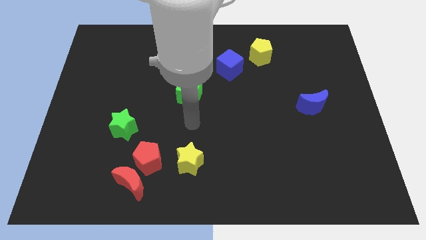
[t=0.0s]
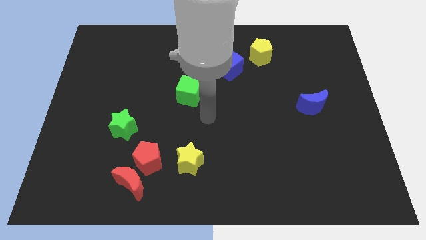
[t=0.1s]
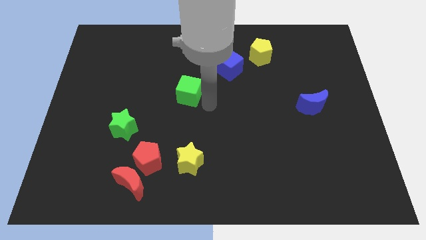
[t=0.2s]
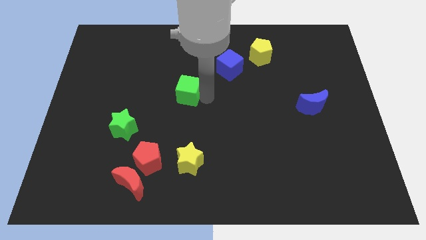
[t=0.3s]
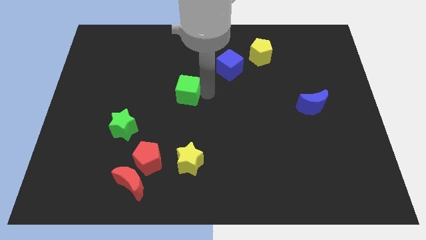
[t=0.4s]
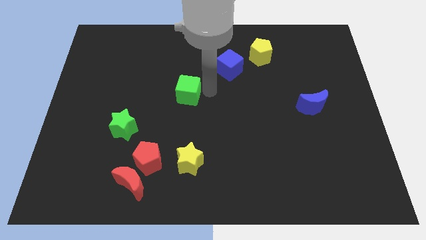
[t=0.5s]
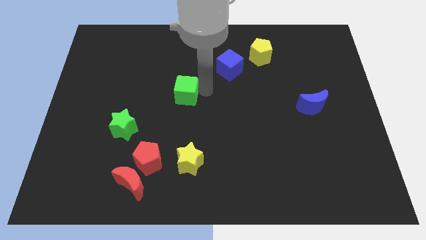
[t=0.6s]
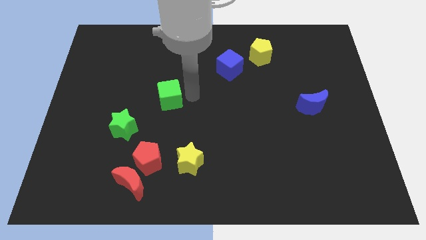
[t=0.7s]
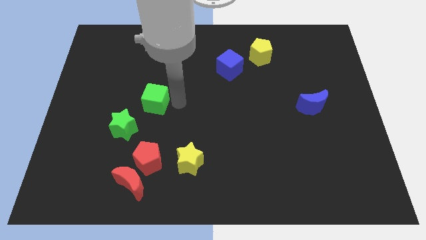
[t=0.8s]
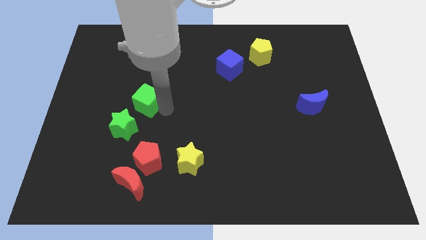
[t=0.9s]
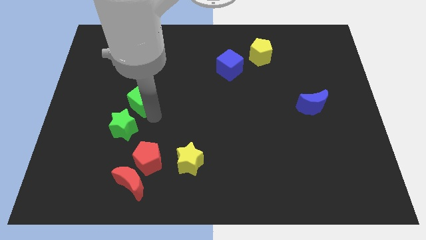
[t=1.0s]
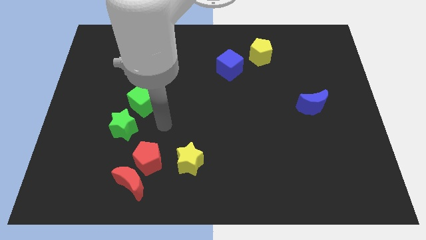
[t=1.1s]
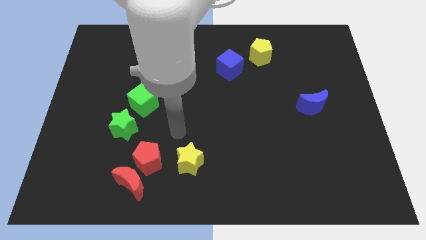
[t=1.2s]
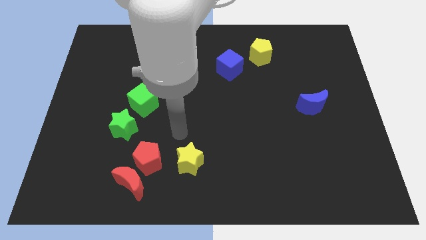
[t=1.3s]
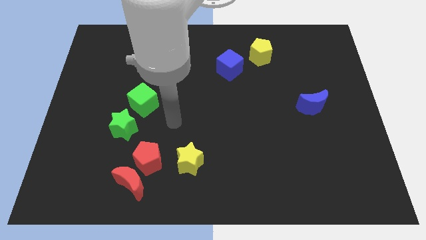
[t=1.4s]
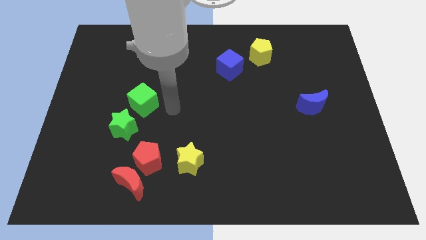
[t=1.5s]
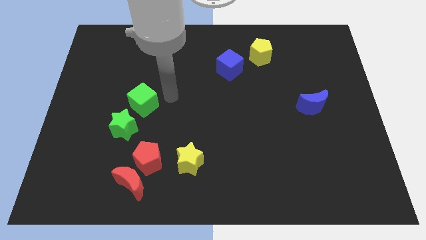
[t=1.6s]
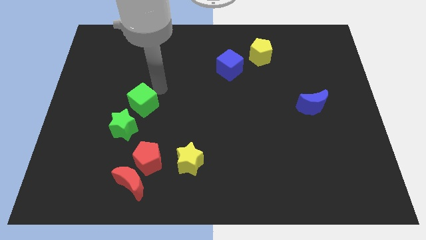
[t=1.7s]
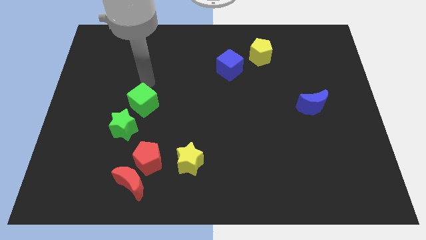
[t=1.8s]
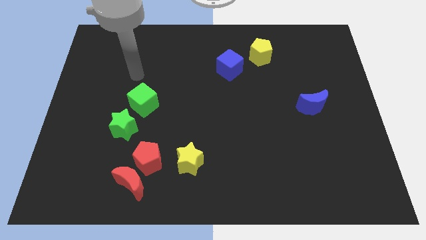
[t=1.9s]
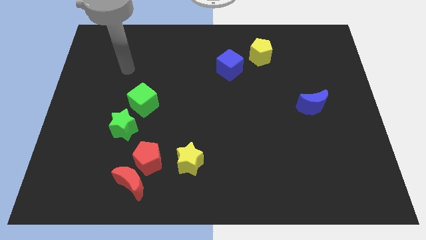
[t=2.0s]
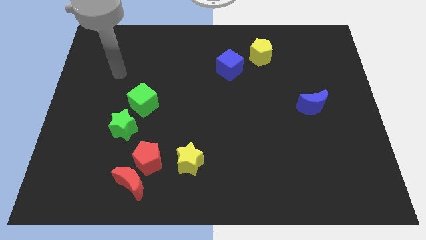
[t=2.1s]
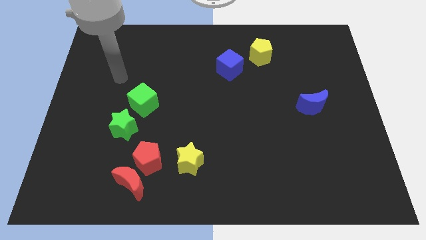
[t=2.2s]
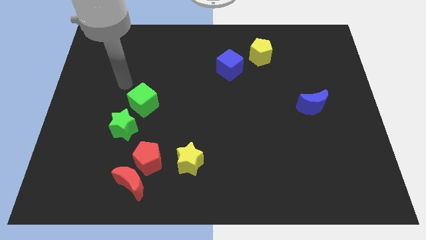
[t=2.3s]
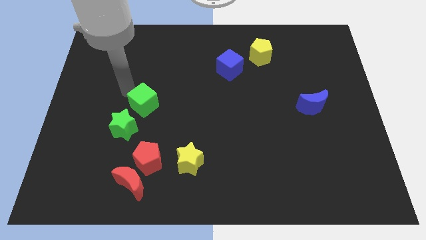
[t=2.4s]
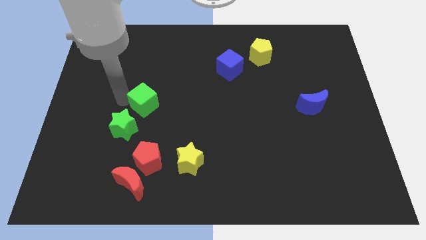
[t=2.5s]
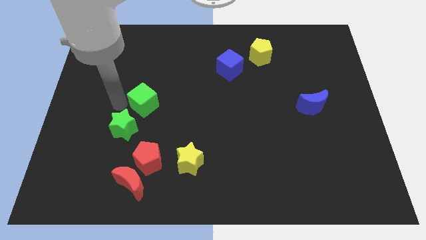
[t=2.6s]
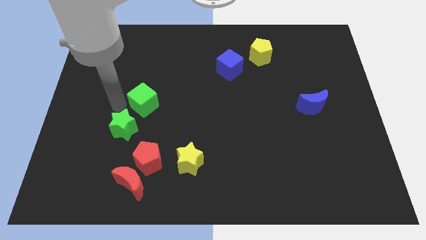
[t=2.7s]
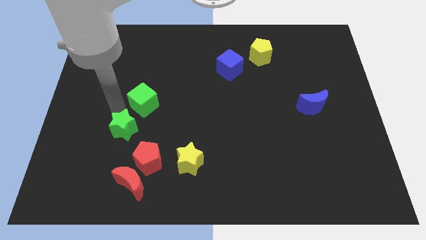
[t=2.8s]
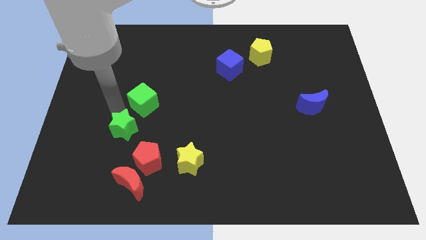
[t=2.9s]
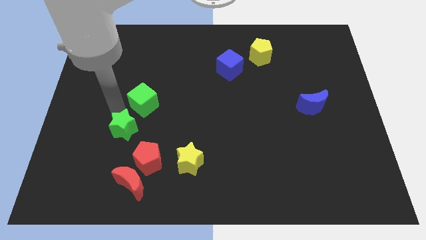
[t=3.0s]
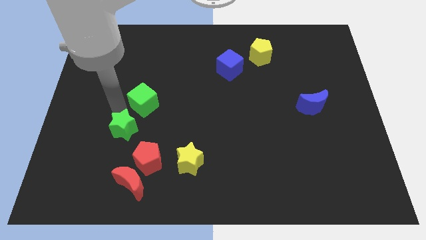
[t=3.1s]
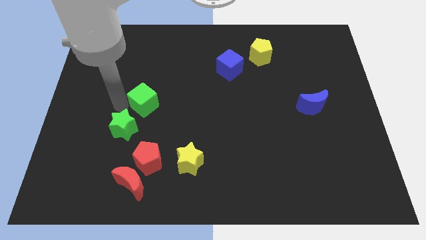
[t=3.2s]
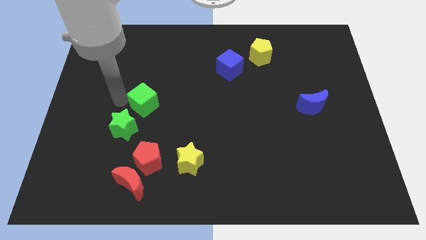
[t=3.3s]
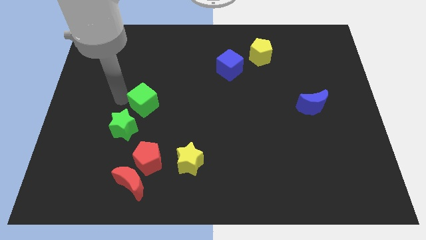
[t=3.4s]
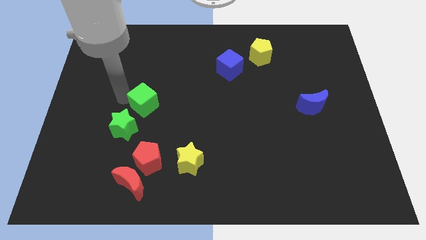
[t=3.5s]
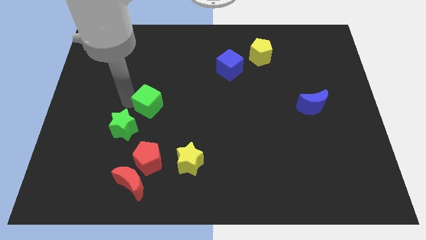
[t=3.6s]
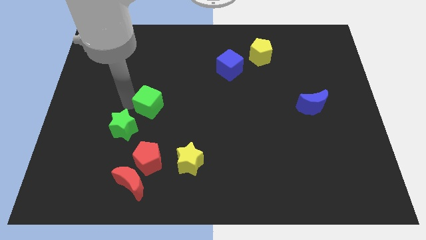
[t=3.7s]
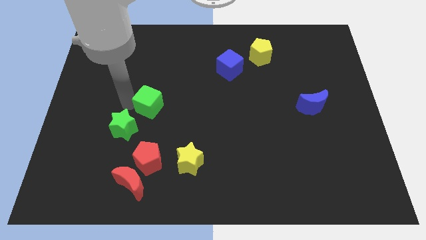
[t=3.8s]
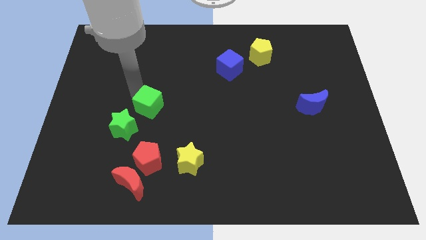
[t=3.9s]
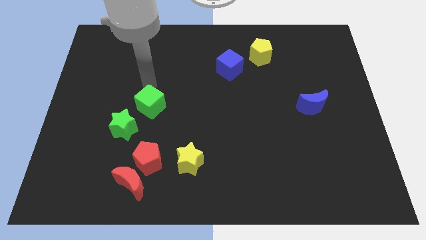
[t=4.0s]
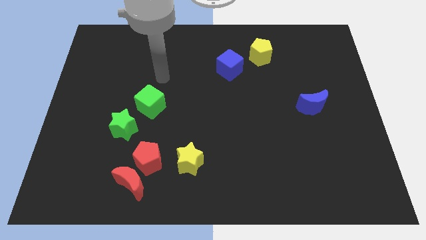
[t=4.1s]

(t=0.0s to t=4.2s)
push the green cube towards the top right of green star

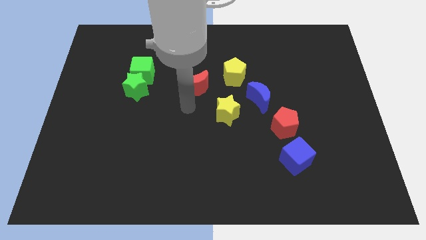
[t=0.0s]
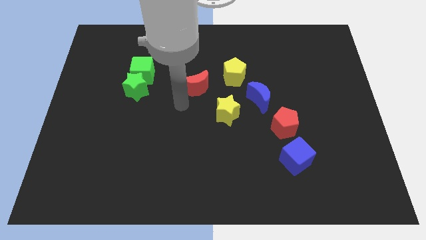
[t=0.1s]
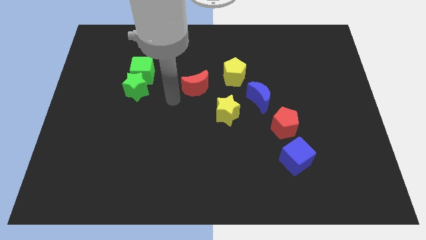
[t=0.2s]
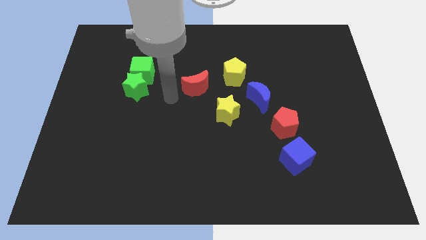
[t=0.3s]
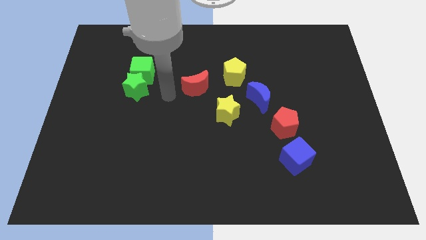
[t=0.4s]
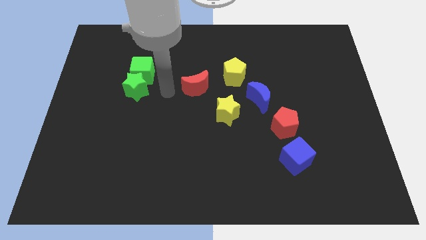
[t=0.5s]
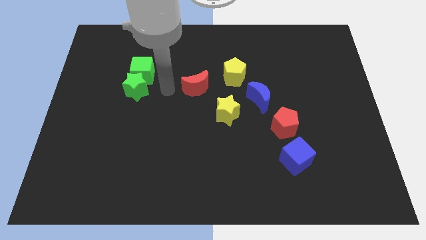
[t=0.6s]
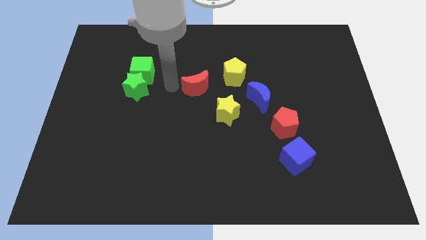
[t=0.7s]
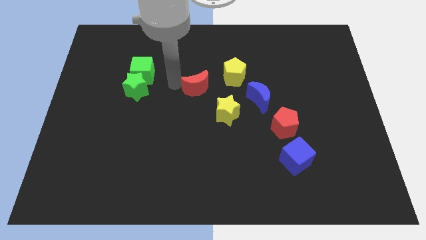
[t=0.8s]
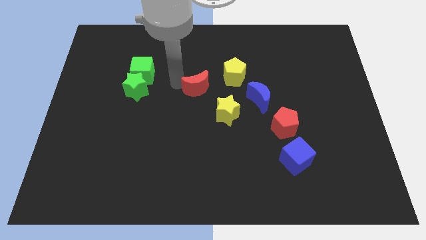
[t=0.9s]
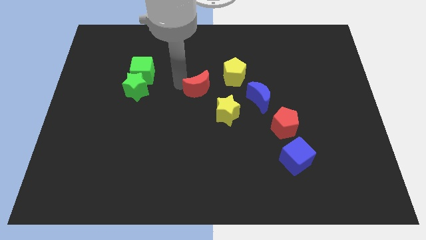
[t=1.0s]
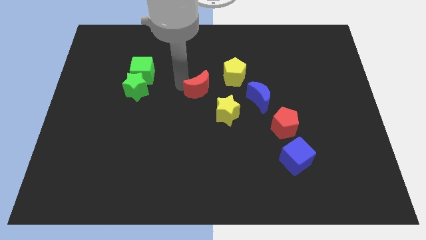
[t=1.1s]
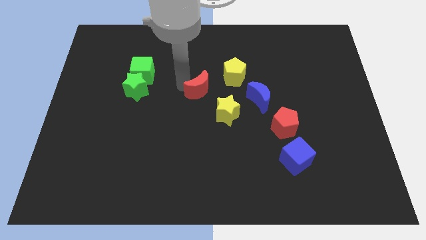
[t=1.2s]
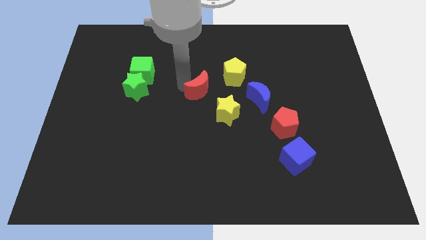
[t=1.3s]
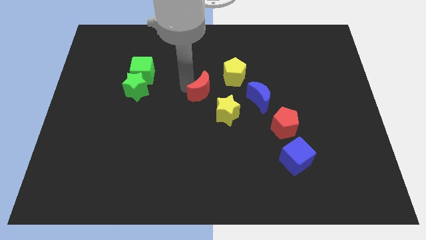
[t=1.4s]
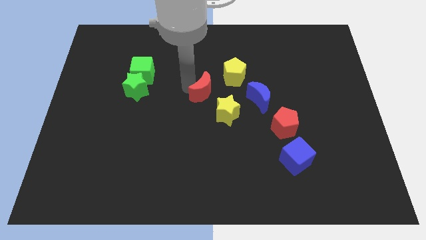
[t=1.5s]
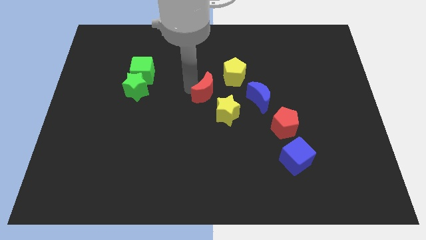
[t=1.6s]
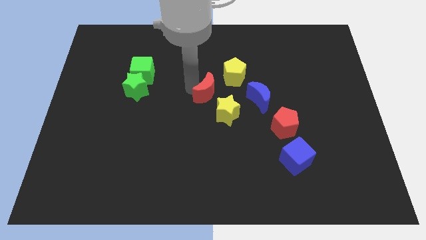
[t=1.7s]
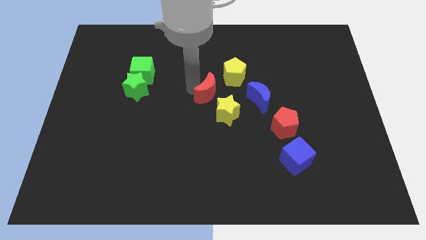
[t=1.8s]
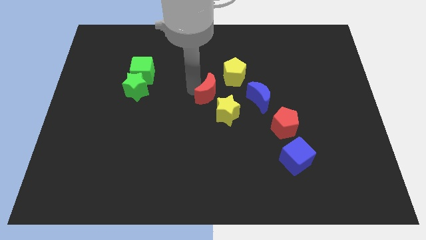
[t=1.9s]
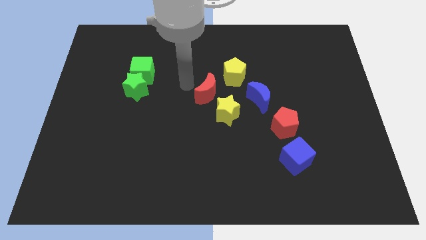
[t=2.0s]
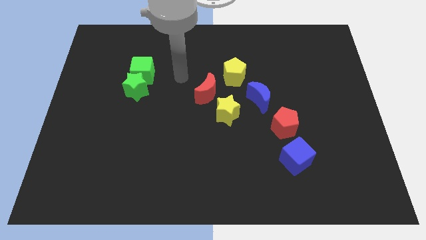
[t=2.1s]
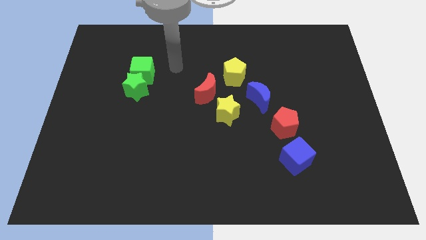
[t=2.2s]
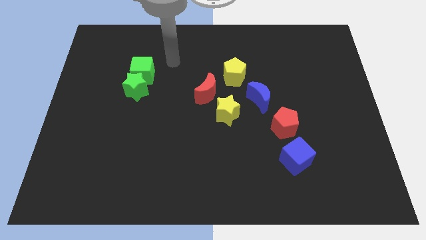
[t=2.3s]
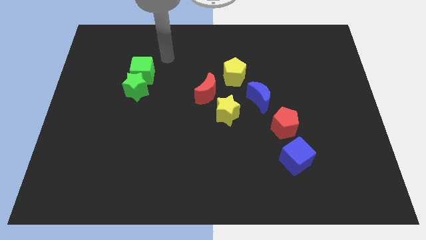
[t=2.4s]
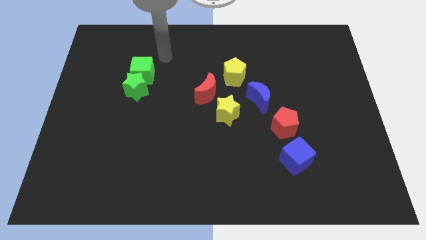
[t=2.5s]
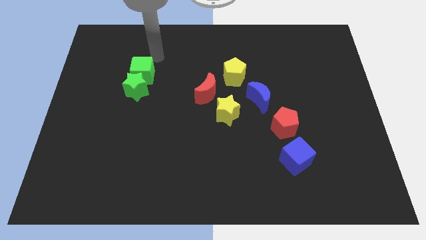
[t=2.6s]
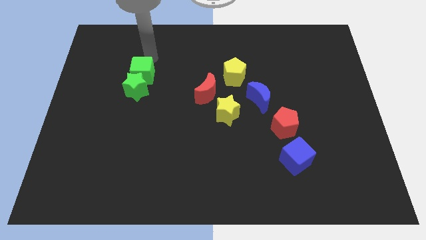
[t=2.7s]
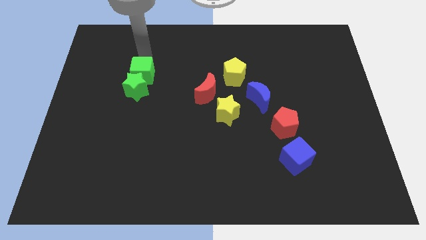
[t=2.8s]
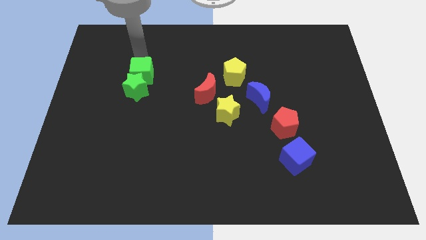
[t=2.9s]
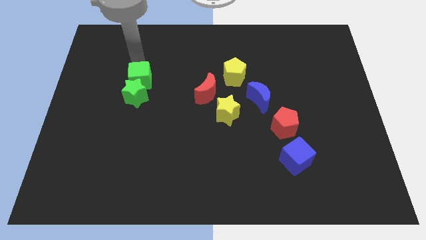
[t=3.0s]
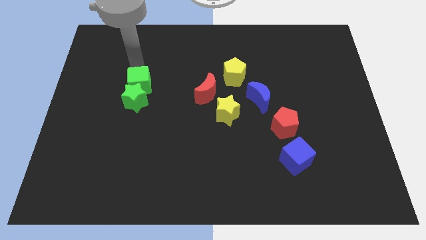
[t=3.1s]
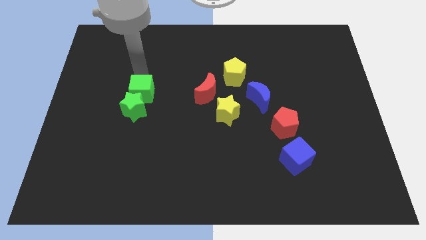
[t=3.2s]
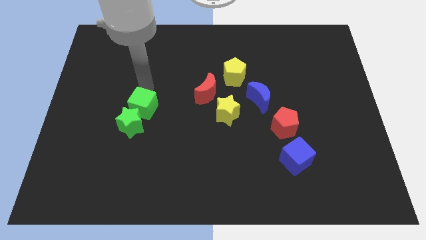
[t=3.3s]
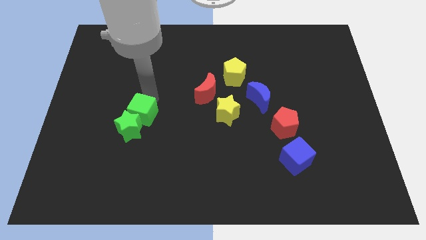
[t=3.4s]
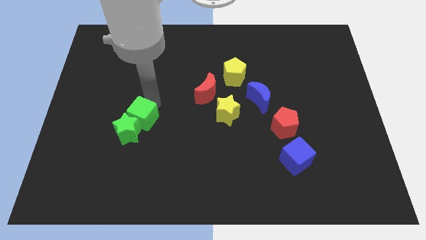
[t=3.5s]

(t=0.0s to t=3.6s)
move the green star slightly to the left bottom corner with the help of green cube

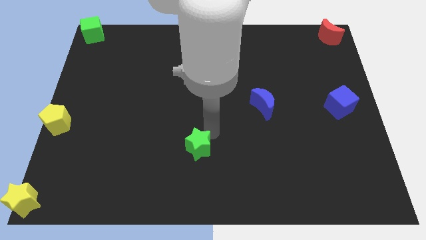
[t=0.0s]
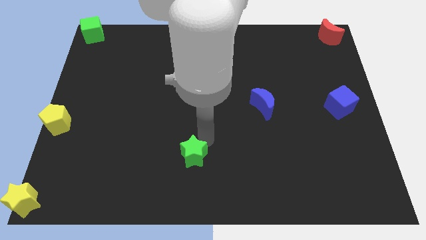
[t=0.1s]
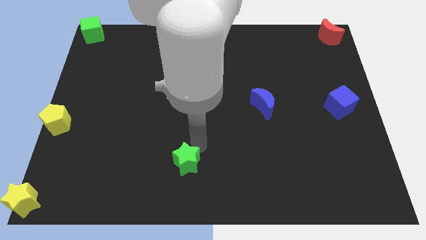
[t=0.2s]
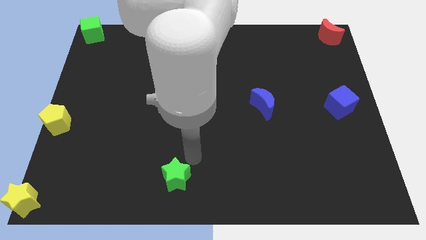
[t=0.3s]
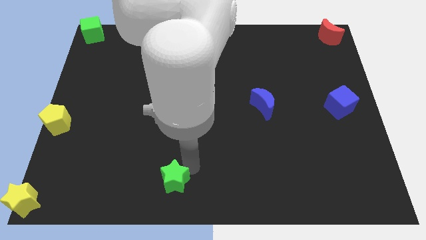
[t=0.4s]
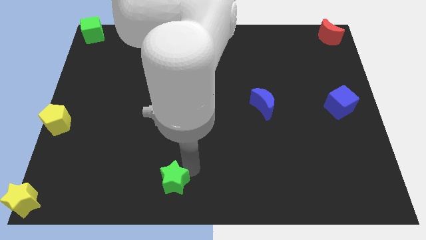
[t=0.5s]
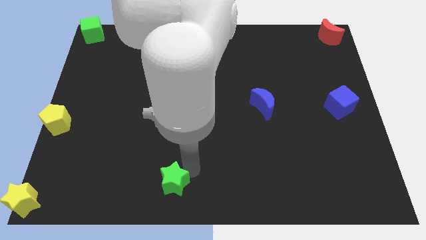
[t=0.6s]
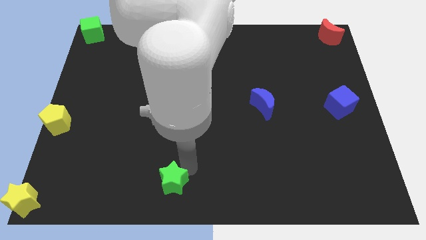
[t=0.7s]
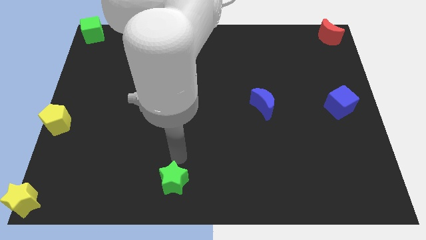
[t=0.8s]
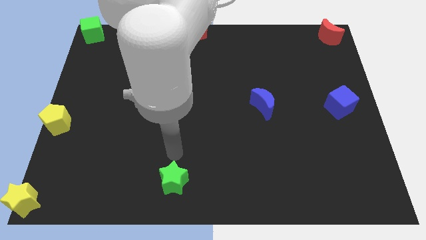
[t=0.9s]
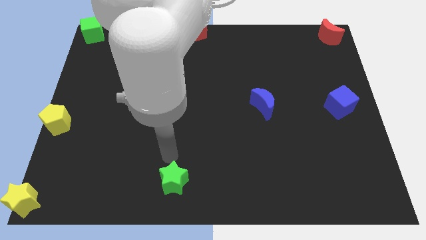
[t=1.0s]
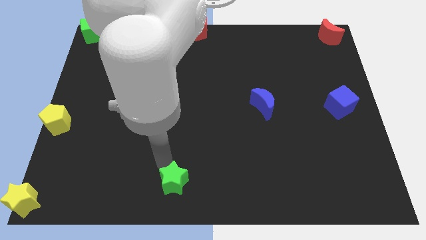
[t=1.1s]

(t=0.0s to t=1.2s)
push the green star towards the bottom side of the board

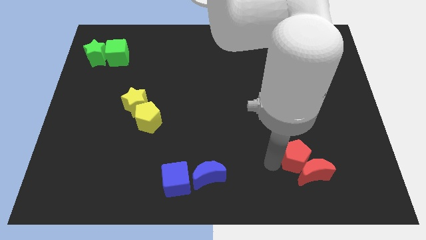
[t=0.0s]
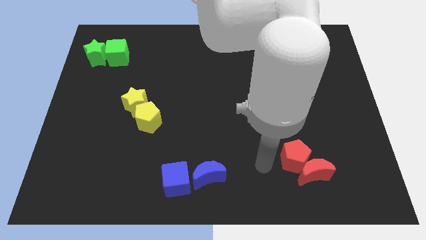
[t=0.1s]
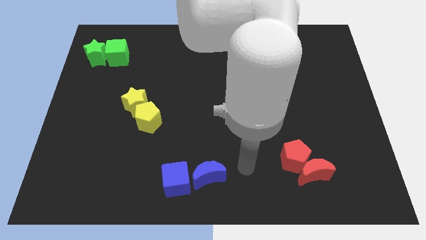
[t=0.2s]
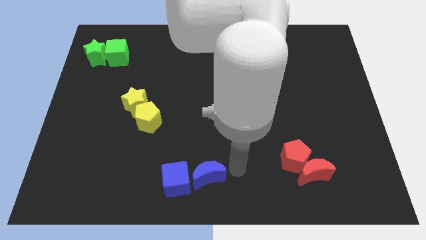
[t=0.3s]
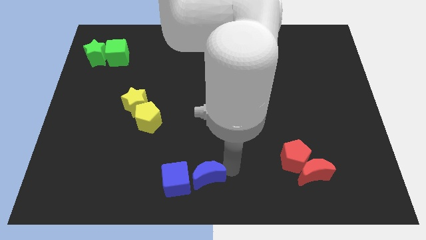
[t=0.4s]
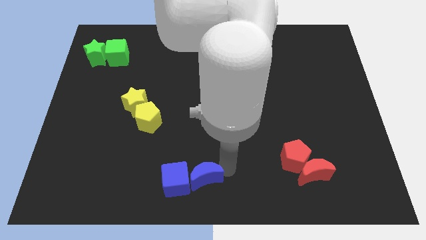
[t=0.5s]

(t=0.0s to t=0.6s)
move your arm right to the blue crescent
